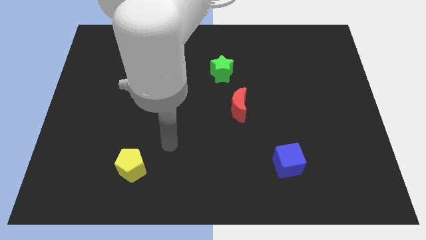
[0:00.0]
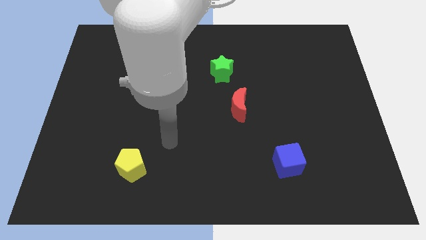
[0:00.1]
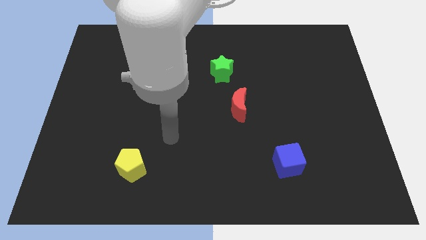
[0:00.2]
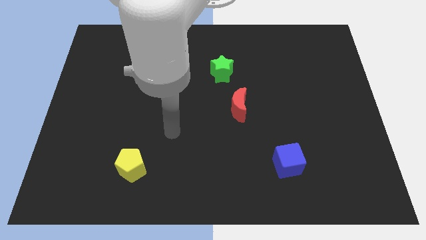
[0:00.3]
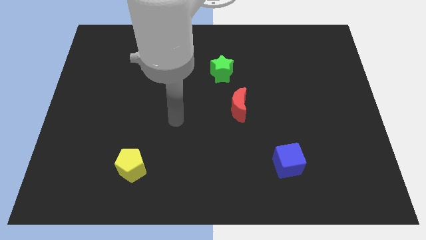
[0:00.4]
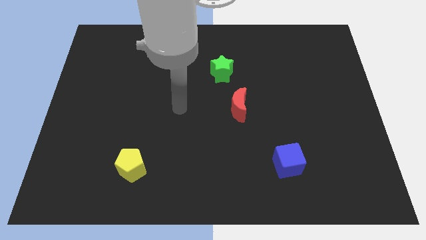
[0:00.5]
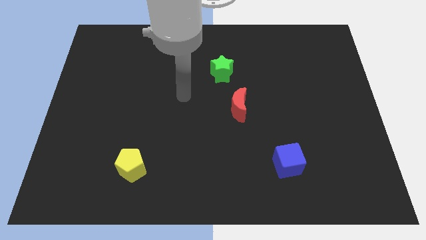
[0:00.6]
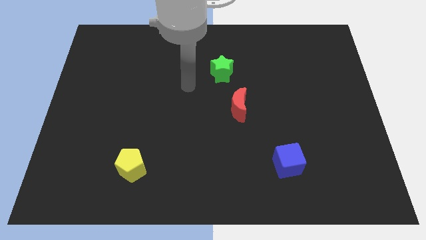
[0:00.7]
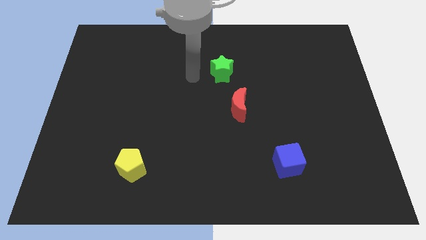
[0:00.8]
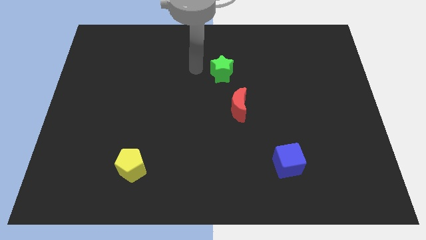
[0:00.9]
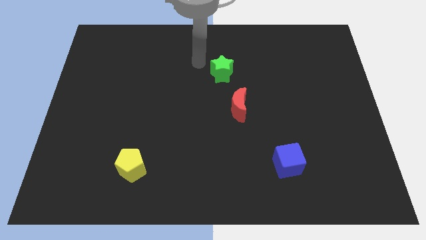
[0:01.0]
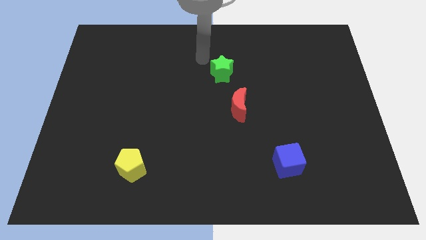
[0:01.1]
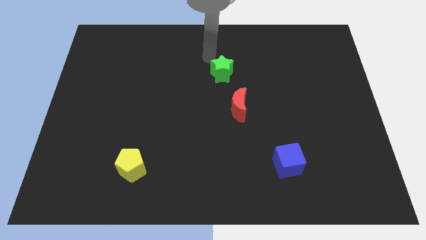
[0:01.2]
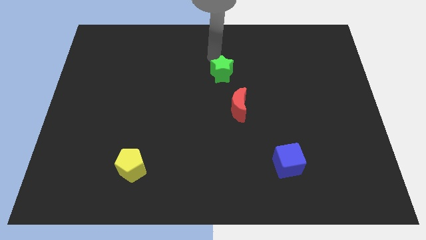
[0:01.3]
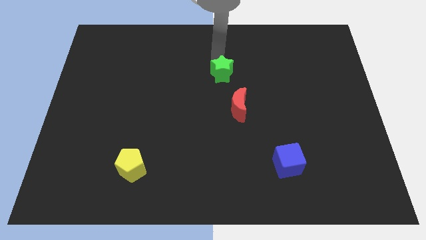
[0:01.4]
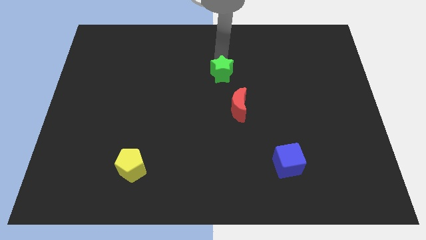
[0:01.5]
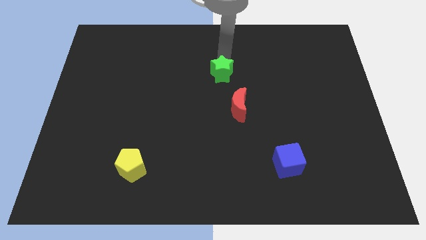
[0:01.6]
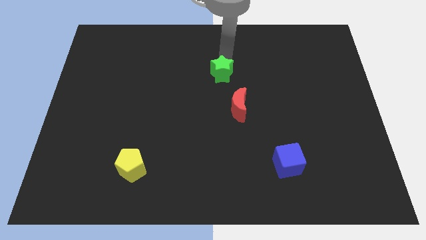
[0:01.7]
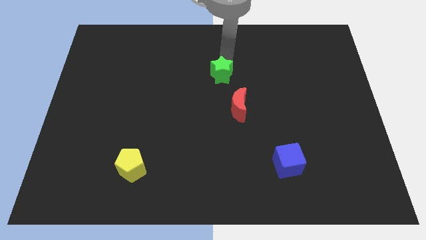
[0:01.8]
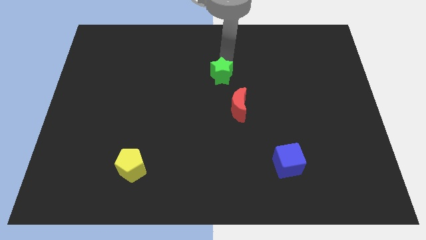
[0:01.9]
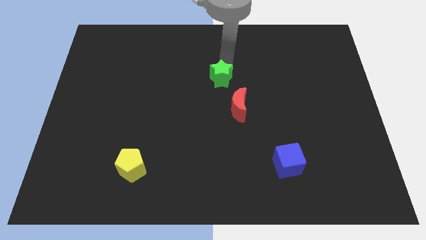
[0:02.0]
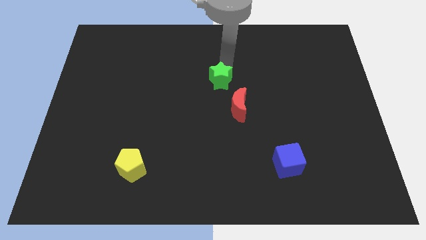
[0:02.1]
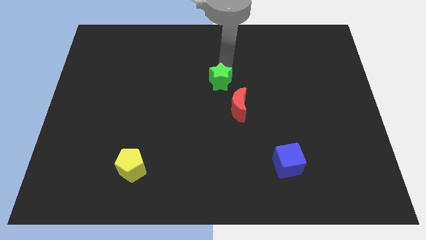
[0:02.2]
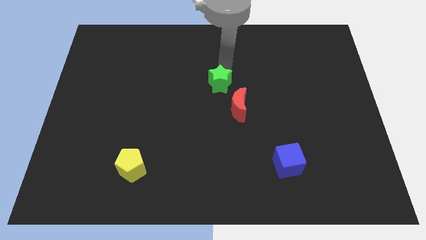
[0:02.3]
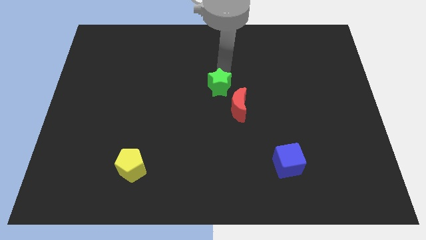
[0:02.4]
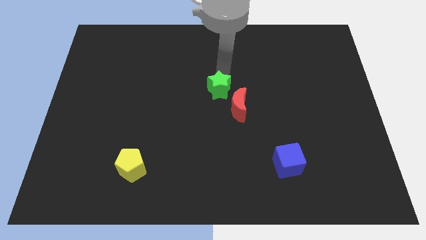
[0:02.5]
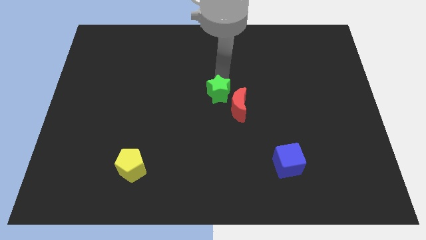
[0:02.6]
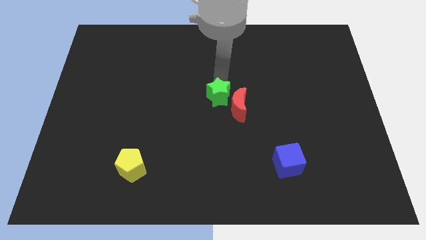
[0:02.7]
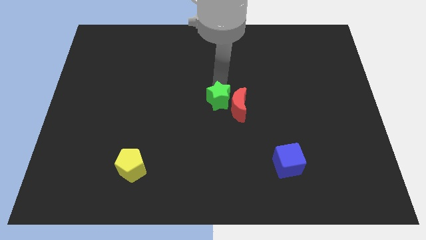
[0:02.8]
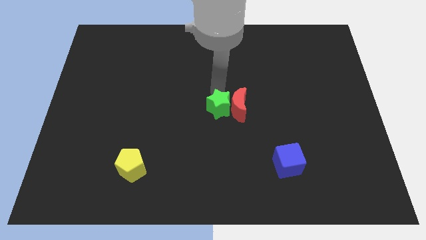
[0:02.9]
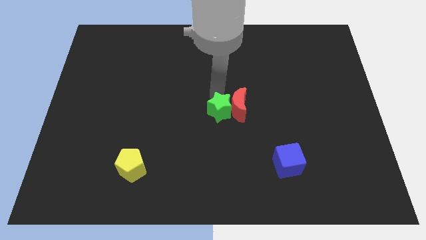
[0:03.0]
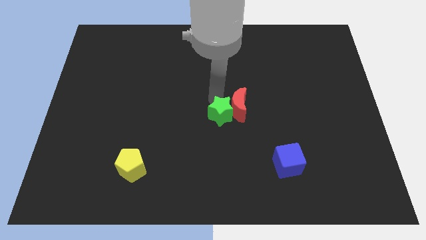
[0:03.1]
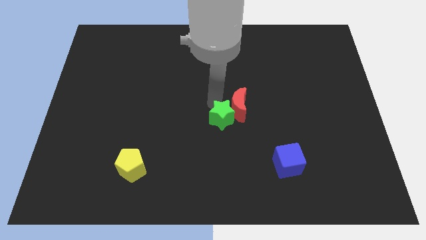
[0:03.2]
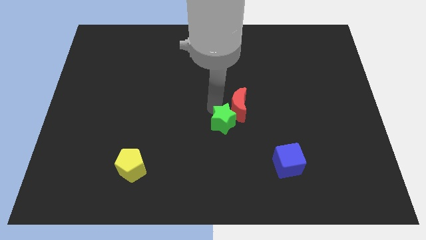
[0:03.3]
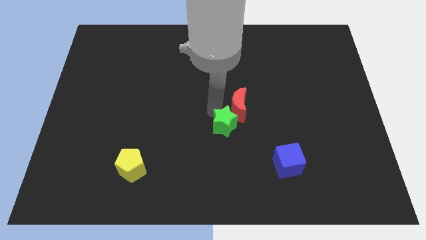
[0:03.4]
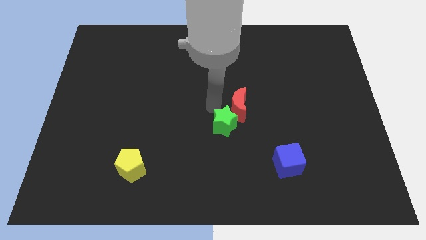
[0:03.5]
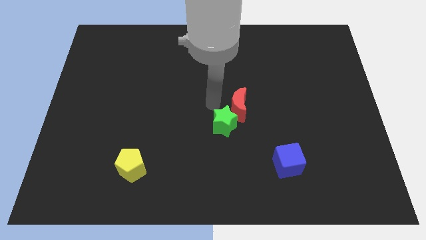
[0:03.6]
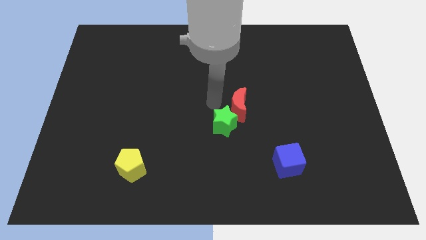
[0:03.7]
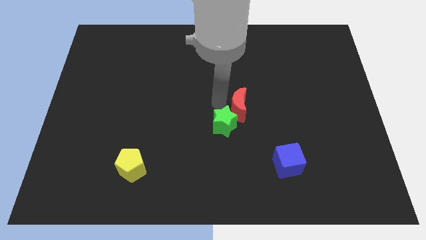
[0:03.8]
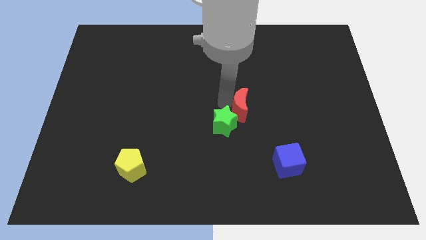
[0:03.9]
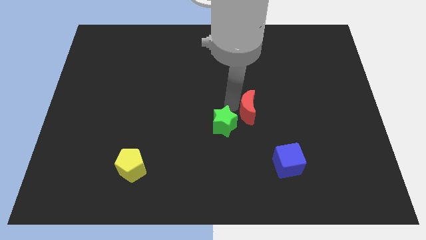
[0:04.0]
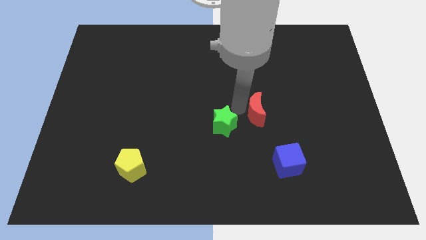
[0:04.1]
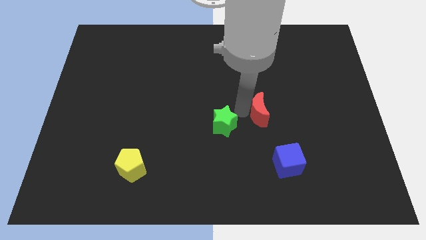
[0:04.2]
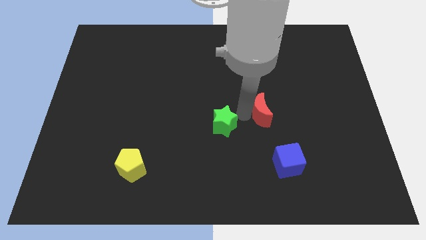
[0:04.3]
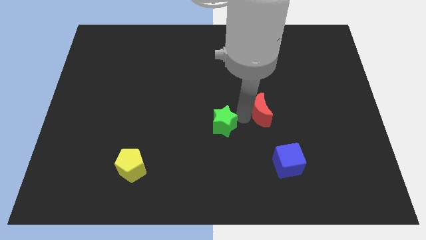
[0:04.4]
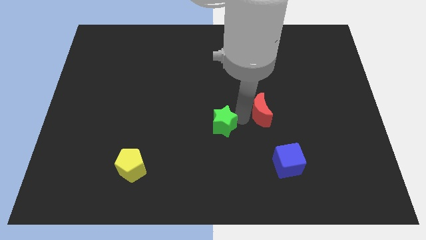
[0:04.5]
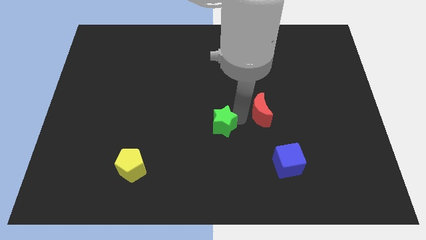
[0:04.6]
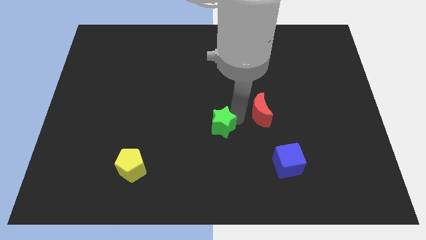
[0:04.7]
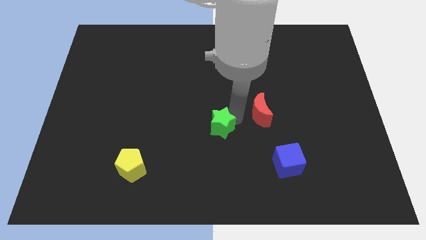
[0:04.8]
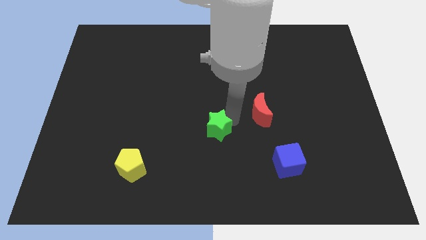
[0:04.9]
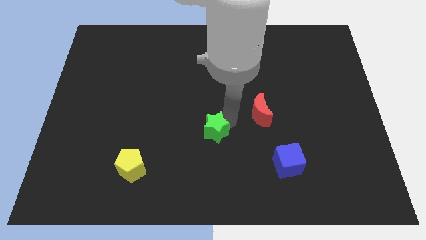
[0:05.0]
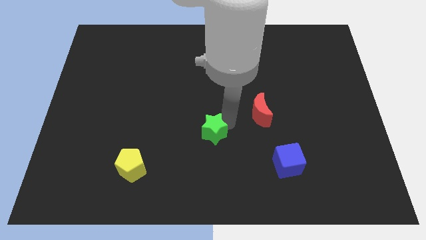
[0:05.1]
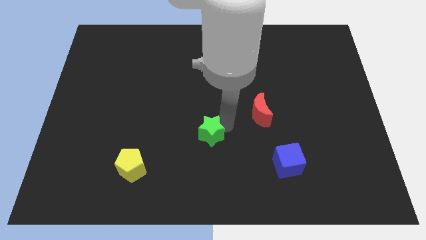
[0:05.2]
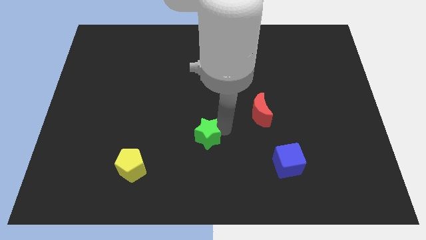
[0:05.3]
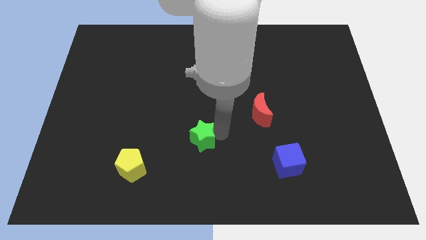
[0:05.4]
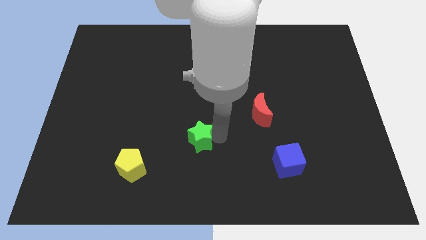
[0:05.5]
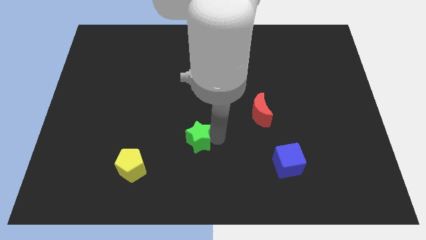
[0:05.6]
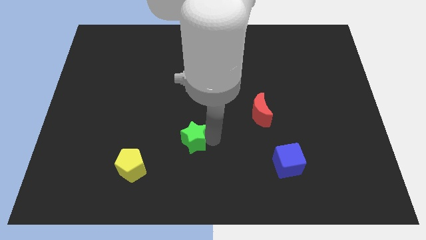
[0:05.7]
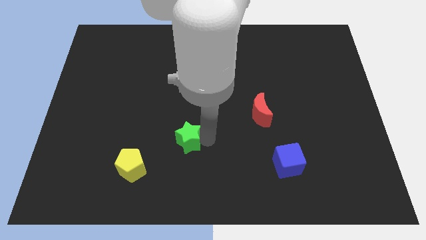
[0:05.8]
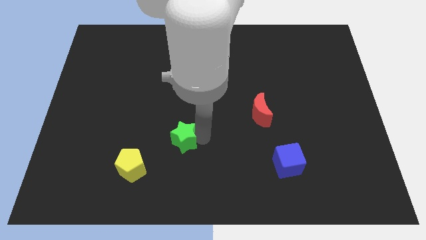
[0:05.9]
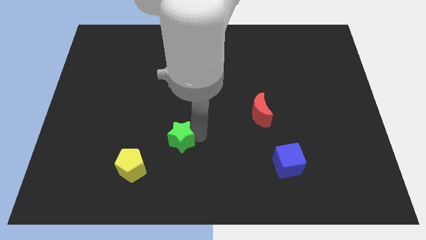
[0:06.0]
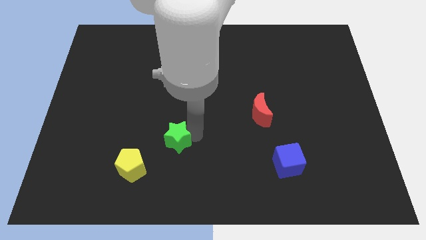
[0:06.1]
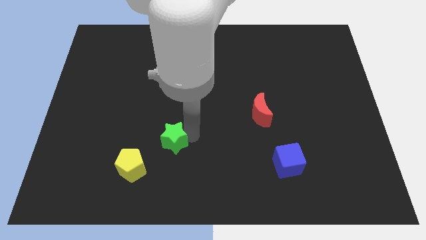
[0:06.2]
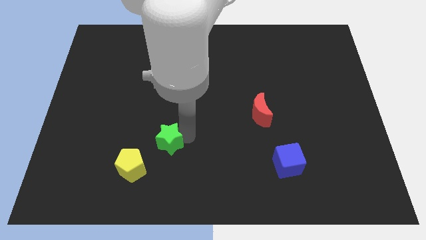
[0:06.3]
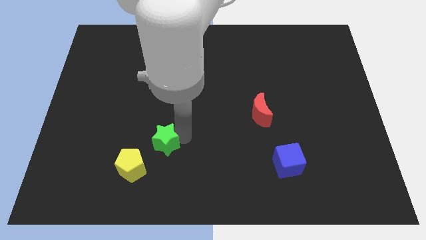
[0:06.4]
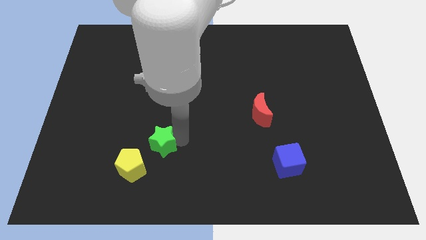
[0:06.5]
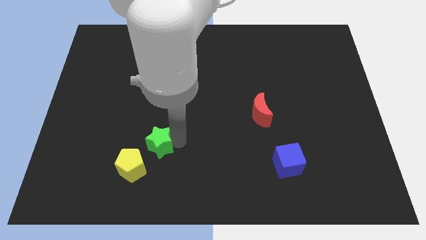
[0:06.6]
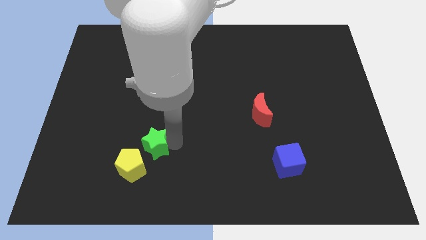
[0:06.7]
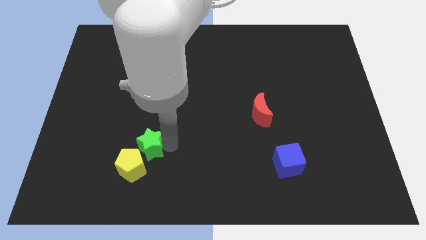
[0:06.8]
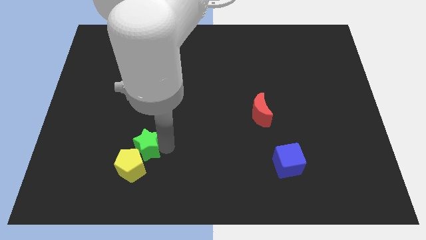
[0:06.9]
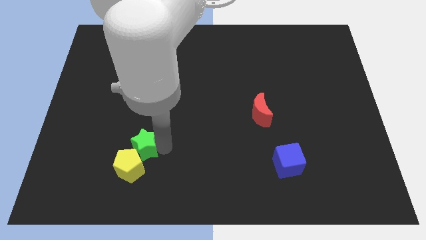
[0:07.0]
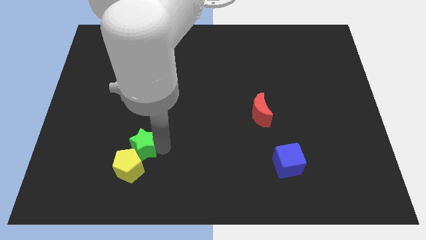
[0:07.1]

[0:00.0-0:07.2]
move the star close to the yellow pentagon

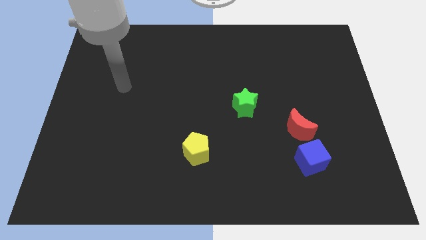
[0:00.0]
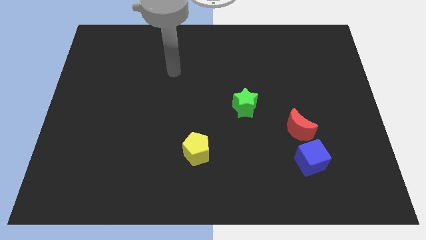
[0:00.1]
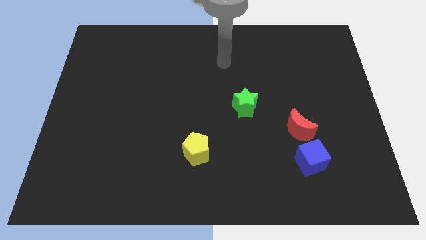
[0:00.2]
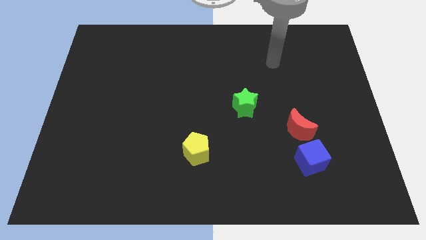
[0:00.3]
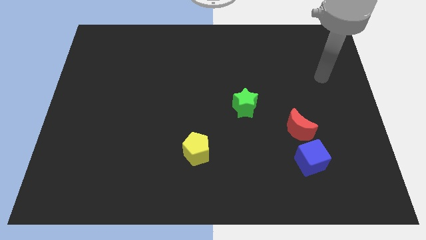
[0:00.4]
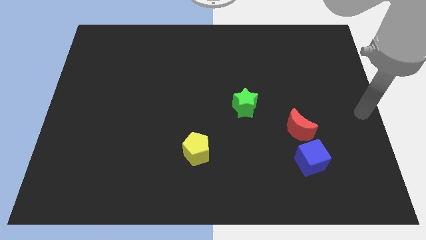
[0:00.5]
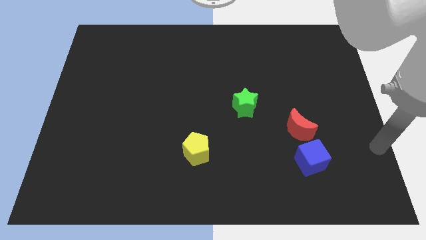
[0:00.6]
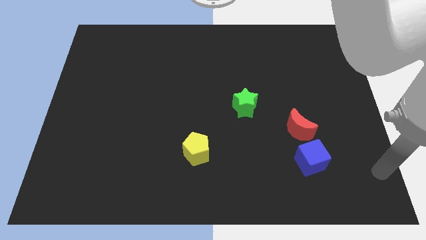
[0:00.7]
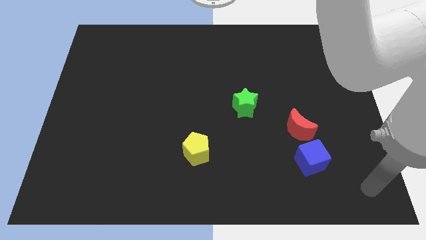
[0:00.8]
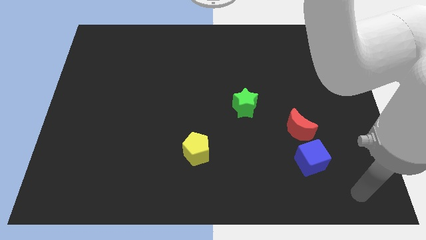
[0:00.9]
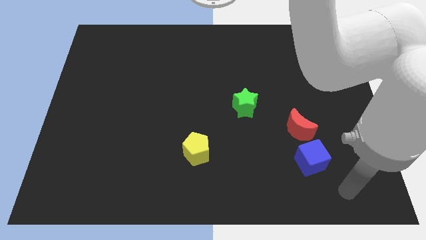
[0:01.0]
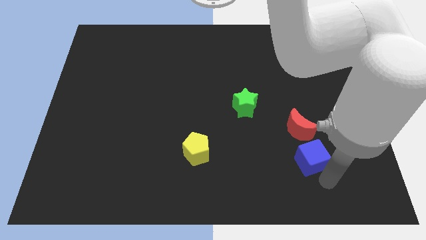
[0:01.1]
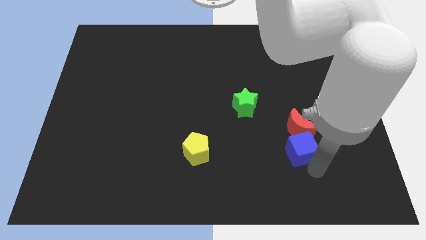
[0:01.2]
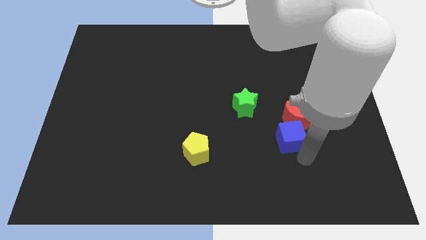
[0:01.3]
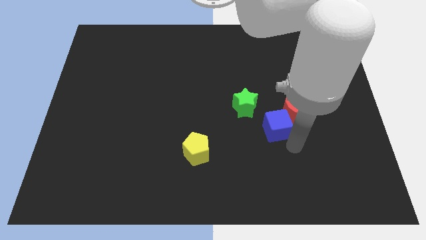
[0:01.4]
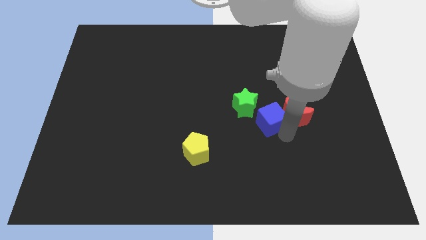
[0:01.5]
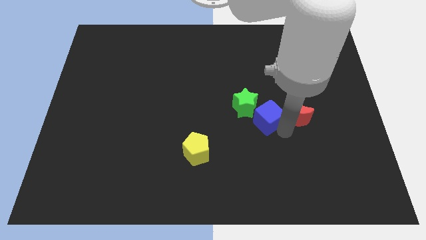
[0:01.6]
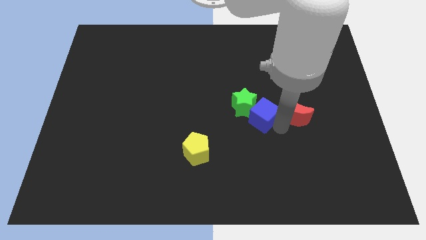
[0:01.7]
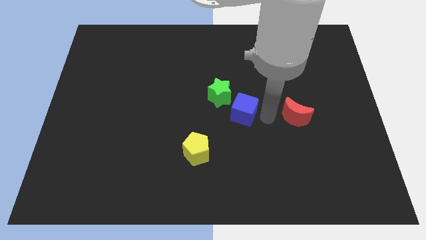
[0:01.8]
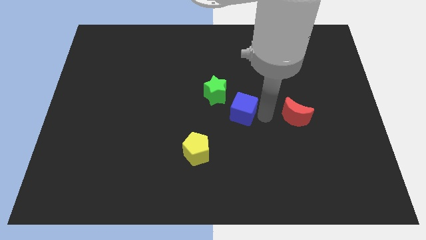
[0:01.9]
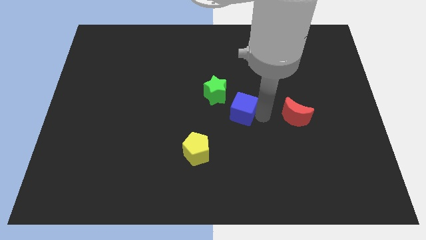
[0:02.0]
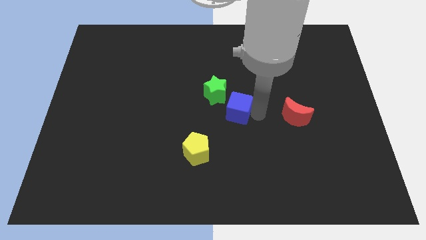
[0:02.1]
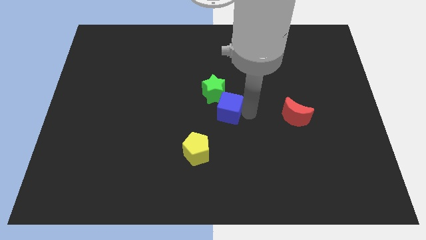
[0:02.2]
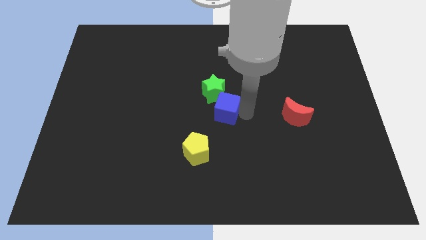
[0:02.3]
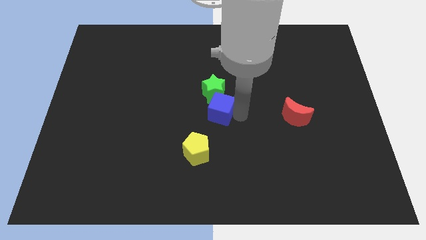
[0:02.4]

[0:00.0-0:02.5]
put the blue block to the green block
